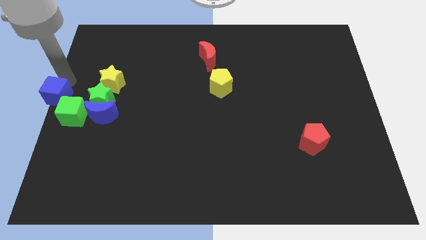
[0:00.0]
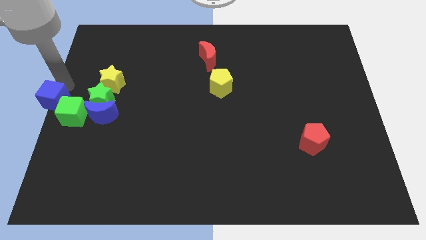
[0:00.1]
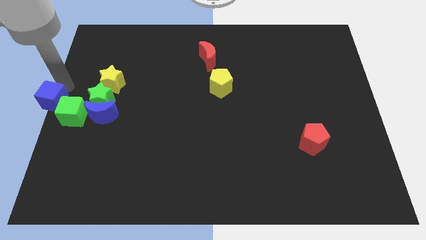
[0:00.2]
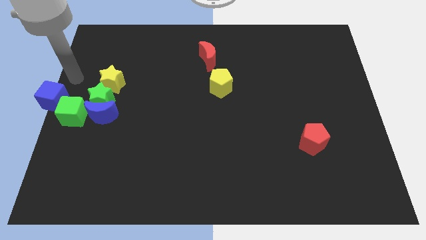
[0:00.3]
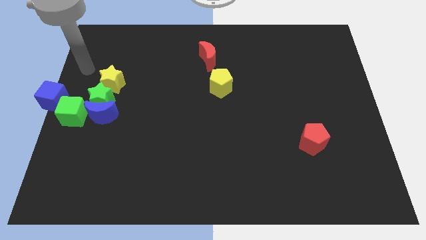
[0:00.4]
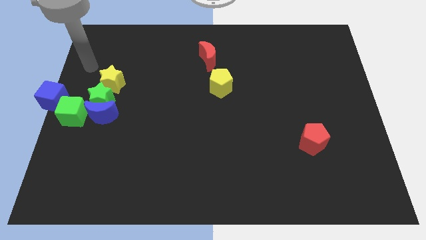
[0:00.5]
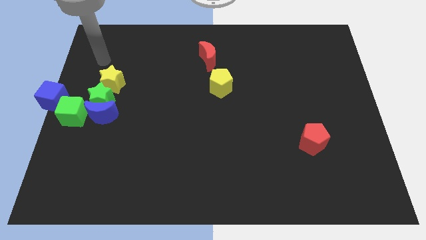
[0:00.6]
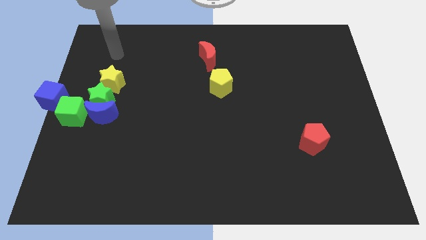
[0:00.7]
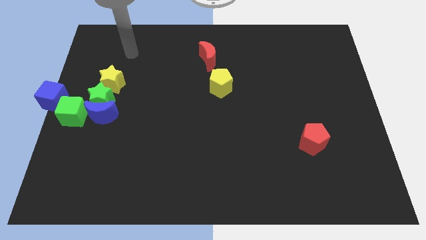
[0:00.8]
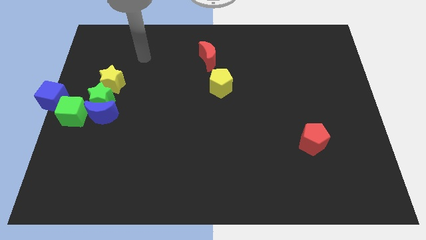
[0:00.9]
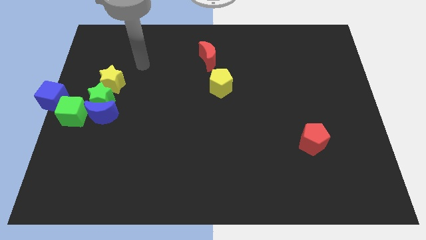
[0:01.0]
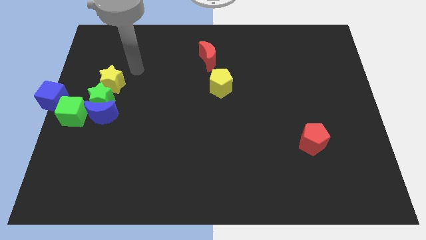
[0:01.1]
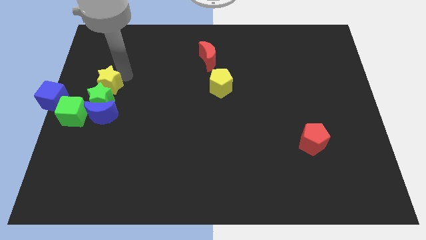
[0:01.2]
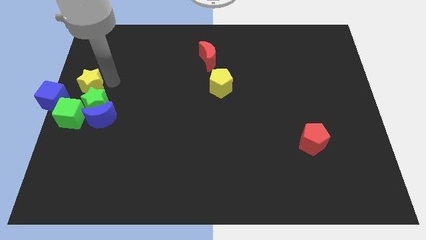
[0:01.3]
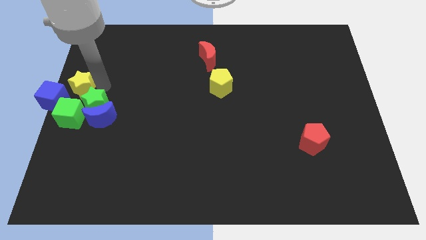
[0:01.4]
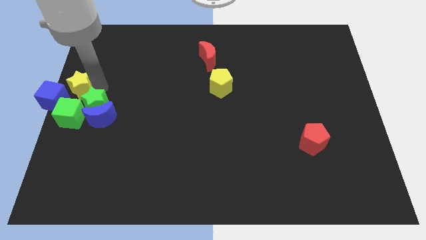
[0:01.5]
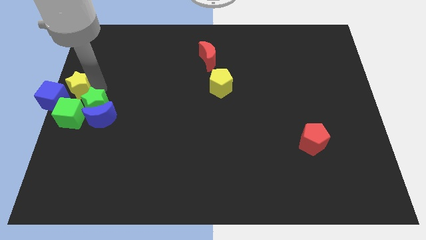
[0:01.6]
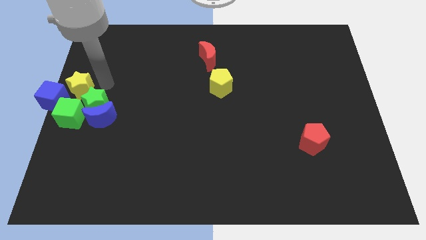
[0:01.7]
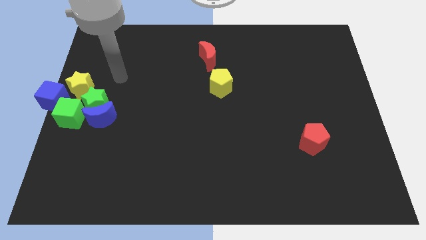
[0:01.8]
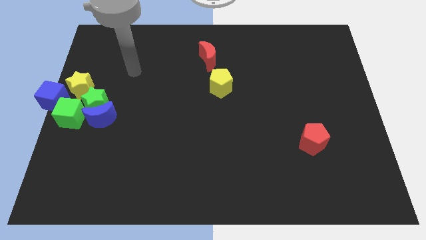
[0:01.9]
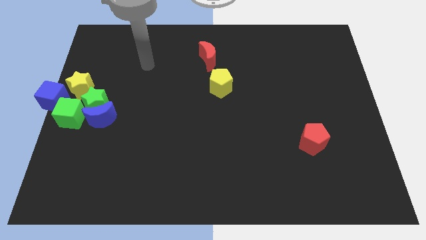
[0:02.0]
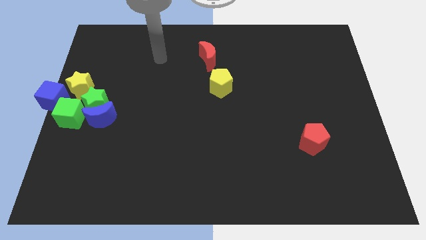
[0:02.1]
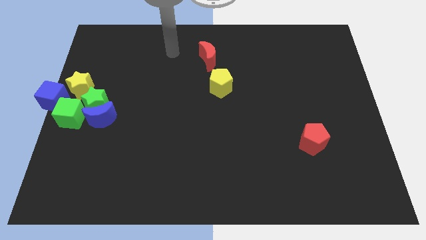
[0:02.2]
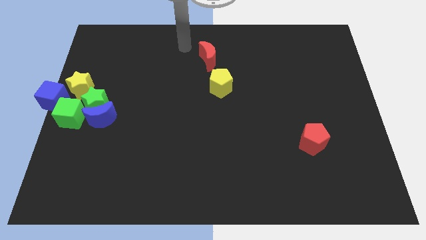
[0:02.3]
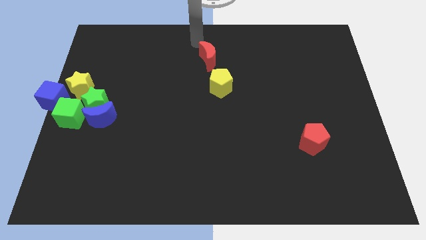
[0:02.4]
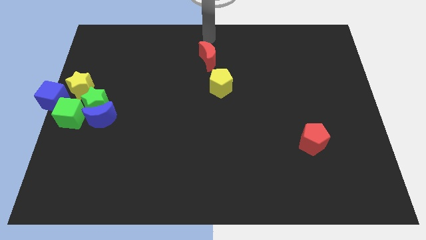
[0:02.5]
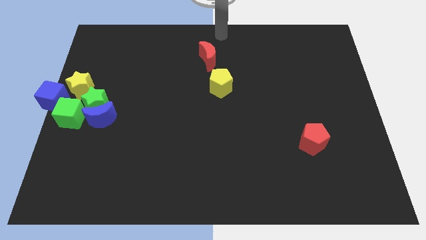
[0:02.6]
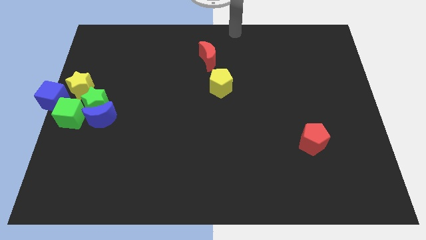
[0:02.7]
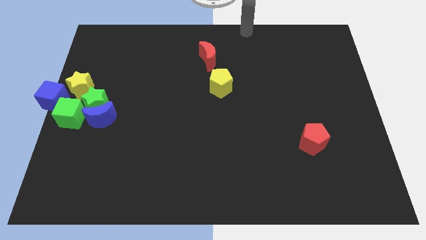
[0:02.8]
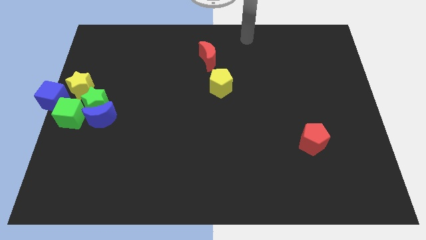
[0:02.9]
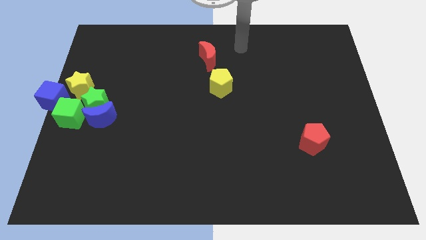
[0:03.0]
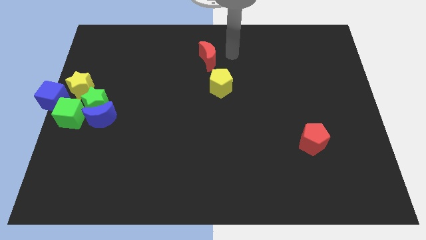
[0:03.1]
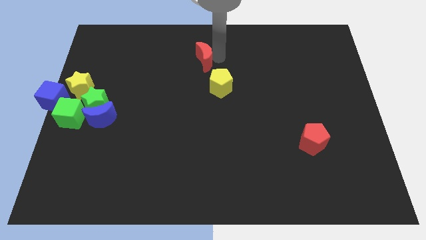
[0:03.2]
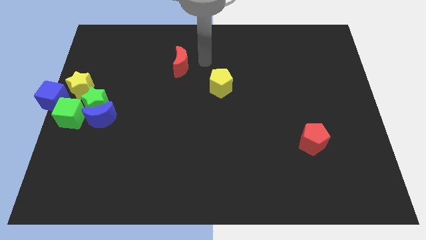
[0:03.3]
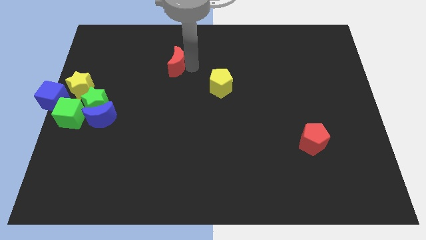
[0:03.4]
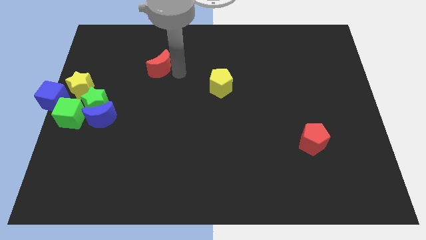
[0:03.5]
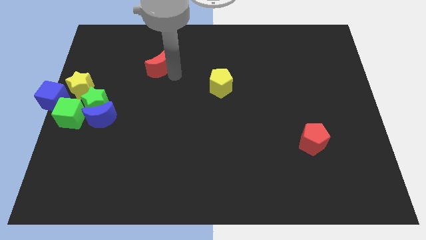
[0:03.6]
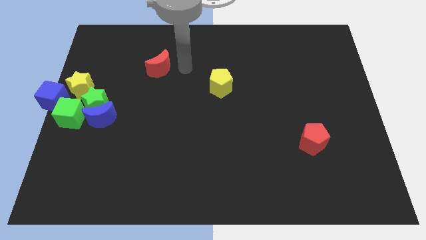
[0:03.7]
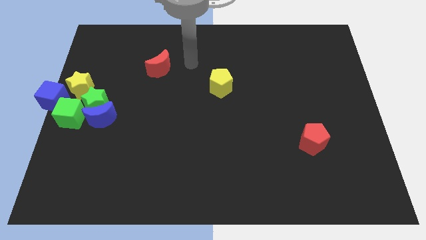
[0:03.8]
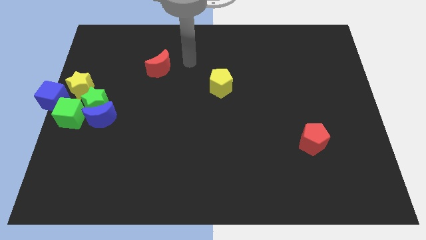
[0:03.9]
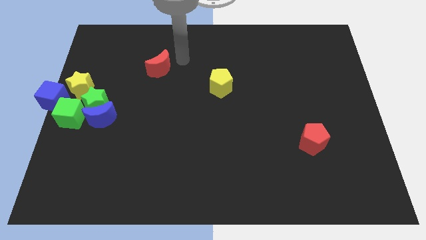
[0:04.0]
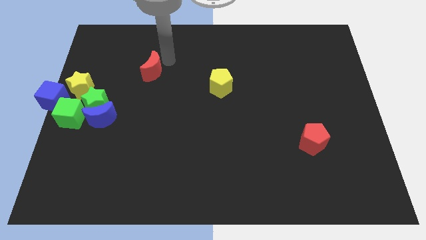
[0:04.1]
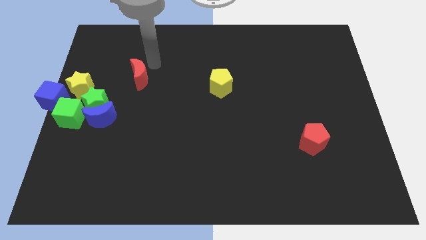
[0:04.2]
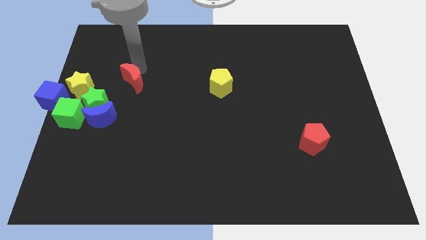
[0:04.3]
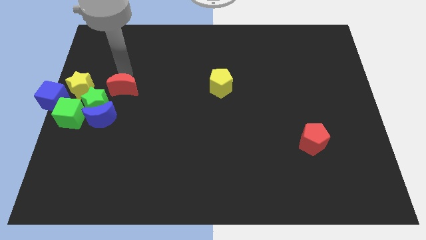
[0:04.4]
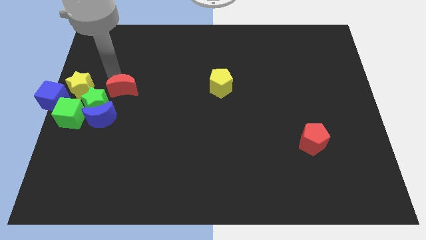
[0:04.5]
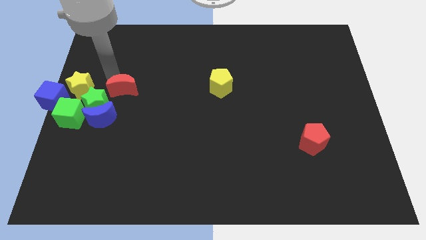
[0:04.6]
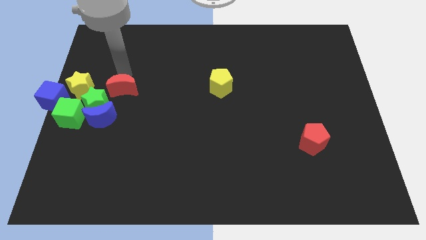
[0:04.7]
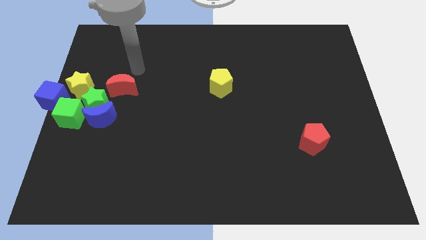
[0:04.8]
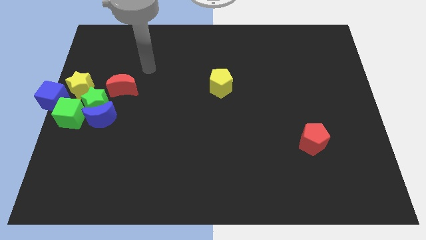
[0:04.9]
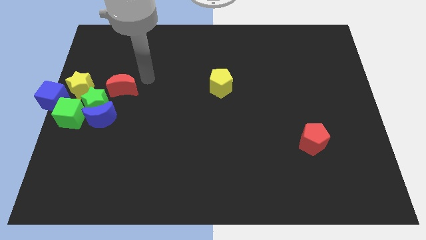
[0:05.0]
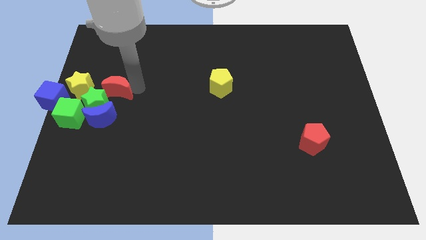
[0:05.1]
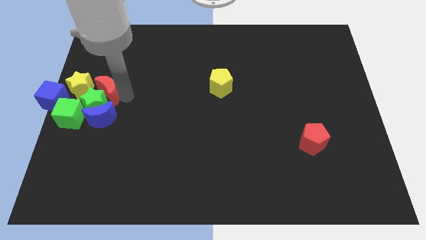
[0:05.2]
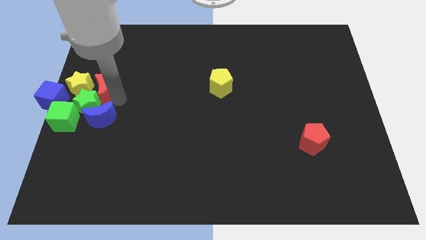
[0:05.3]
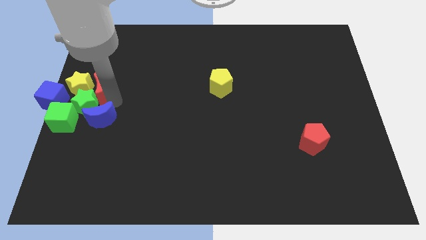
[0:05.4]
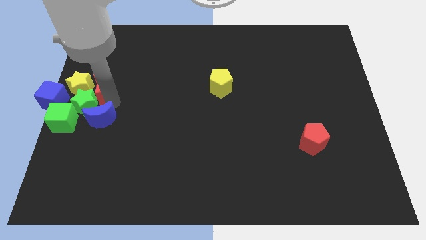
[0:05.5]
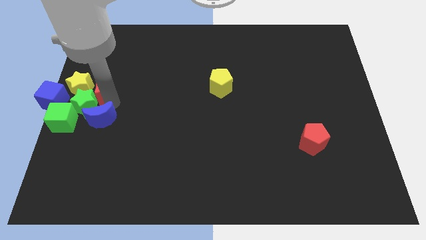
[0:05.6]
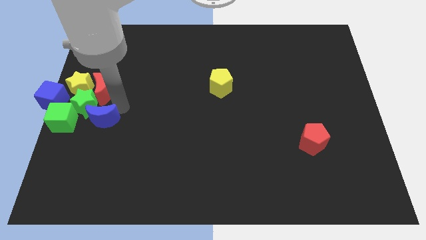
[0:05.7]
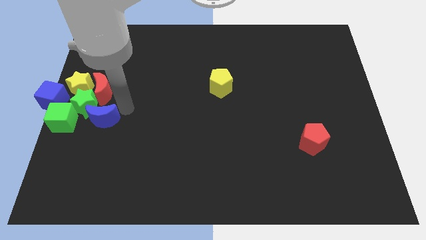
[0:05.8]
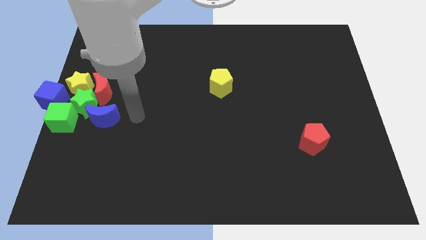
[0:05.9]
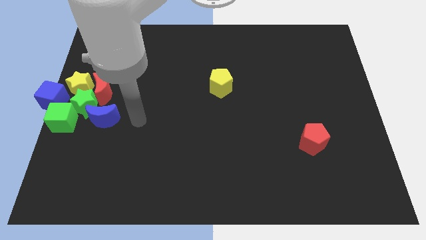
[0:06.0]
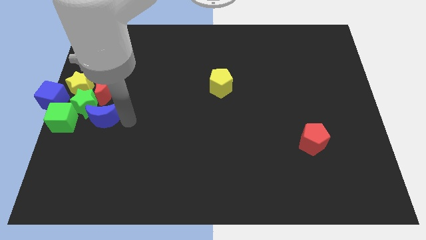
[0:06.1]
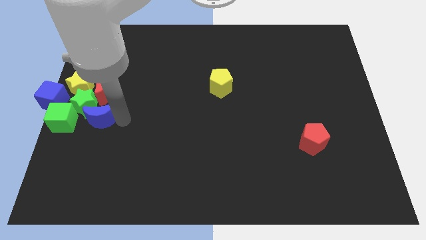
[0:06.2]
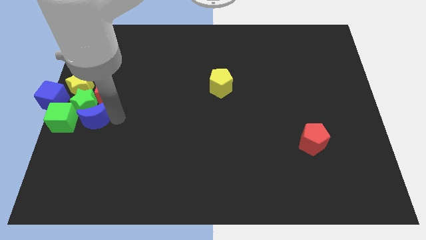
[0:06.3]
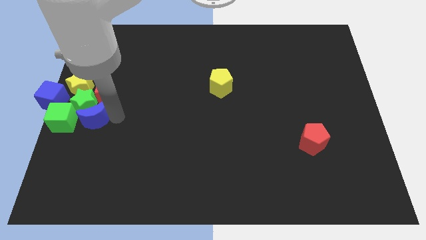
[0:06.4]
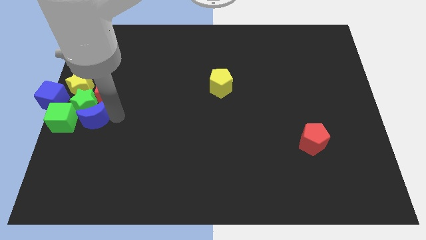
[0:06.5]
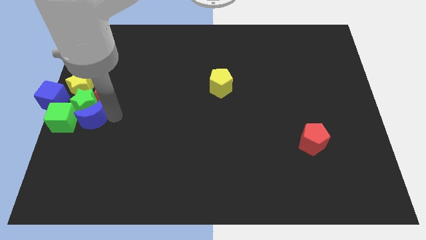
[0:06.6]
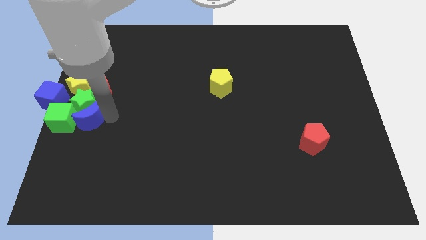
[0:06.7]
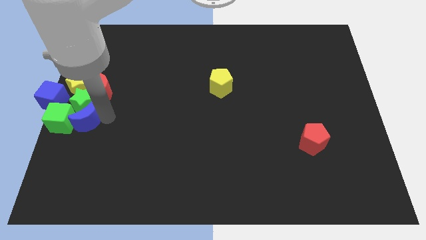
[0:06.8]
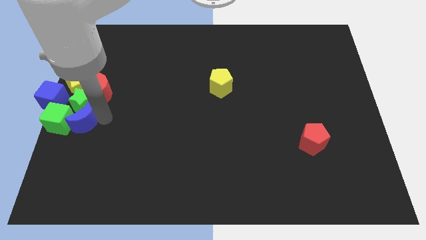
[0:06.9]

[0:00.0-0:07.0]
group up all the blocks at the left side of the board except the yellow pentagon and red pentagon

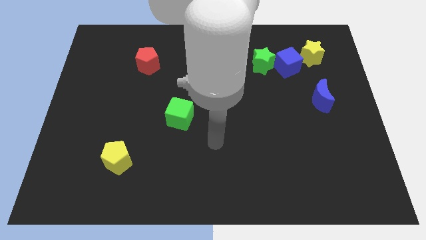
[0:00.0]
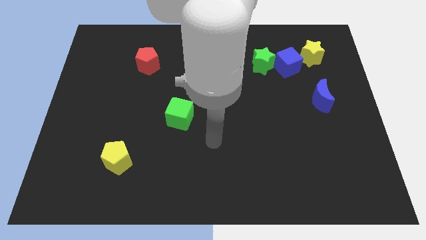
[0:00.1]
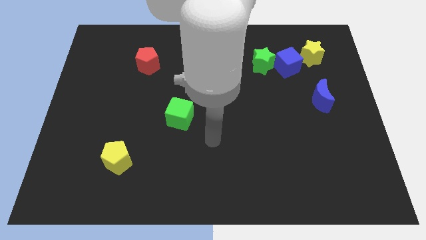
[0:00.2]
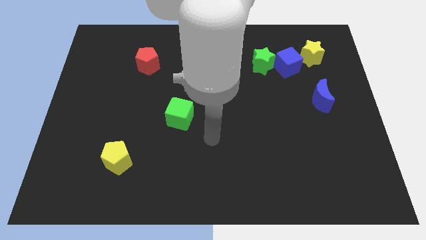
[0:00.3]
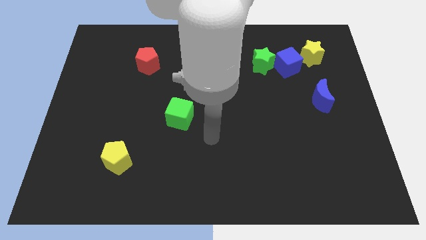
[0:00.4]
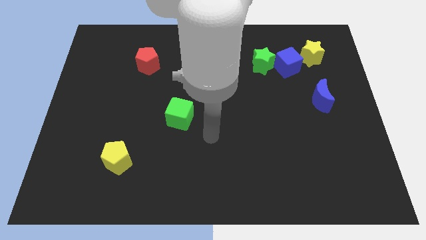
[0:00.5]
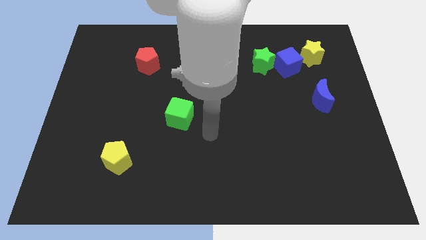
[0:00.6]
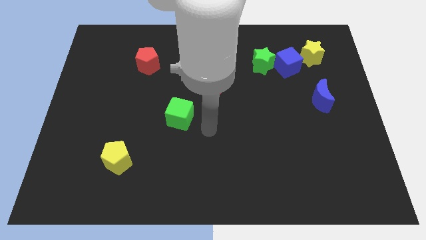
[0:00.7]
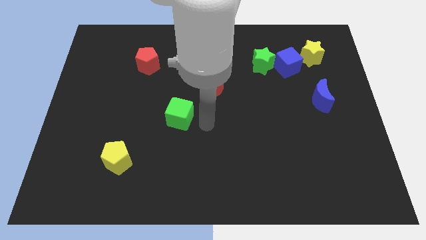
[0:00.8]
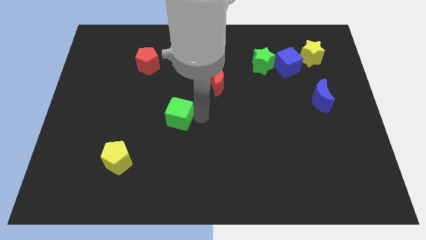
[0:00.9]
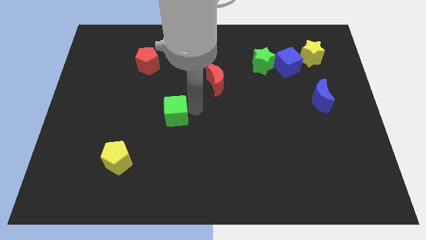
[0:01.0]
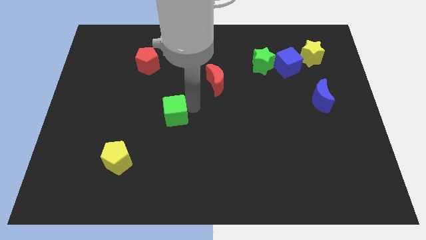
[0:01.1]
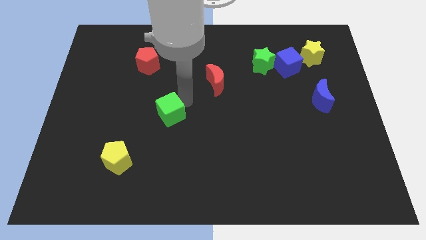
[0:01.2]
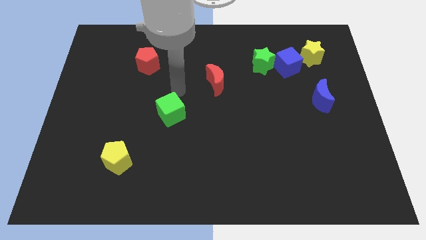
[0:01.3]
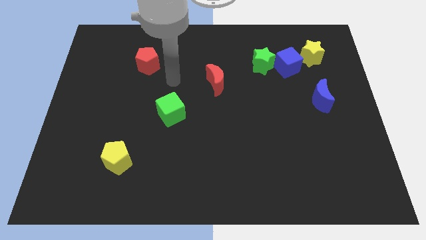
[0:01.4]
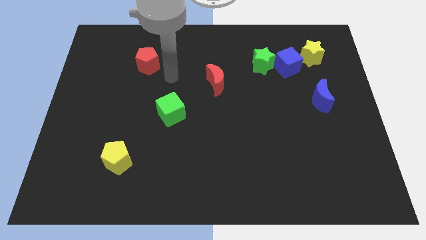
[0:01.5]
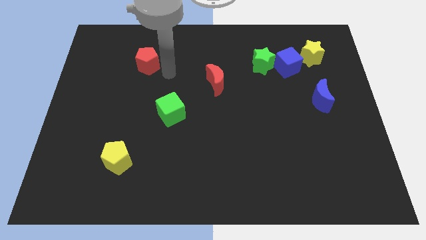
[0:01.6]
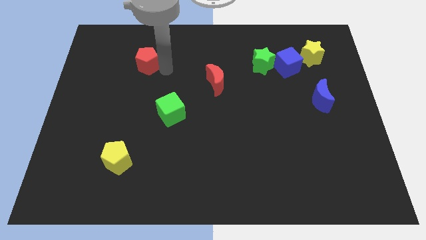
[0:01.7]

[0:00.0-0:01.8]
move green cube slightly
